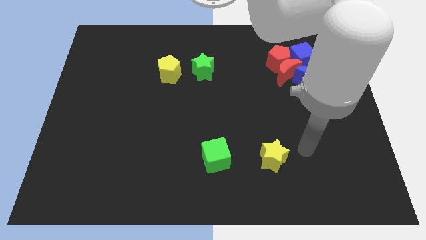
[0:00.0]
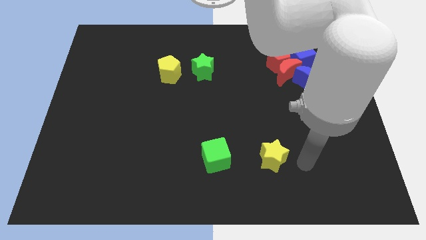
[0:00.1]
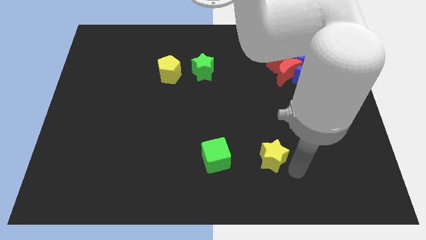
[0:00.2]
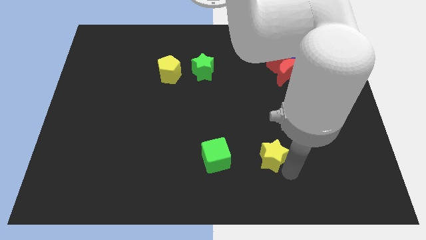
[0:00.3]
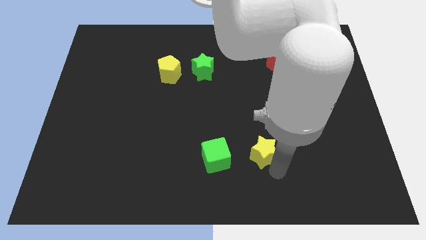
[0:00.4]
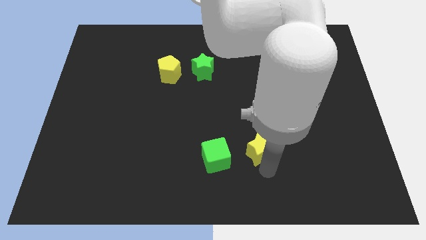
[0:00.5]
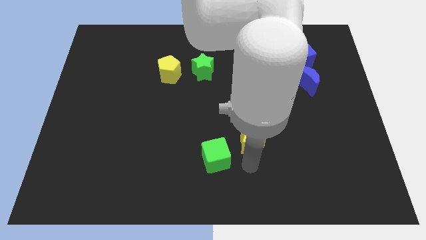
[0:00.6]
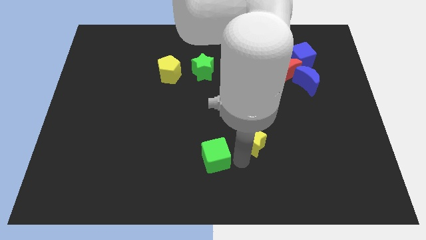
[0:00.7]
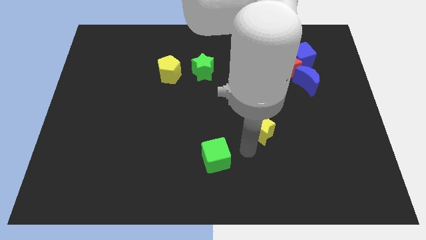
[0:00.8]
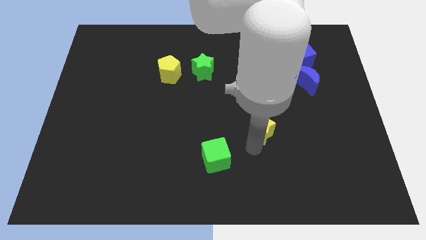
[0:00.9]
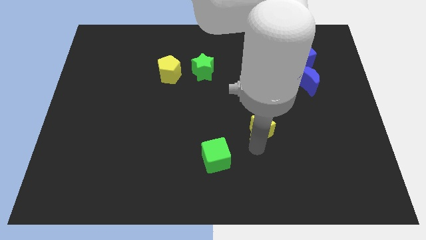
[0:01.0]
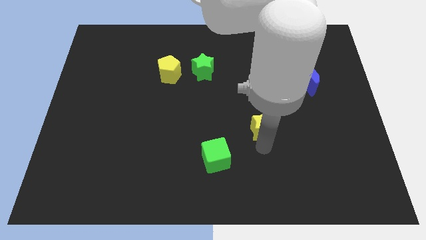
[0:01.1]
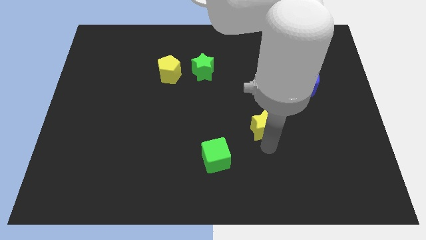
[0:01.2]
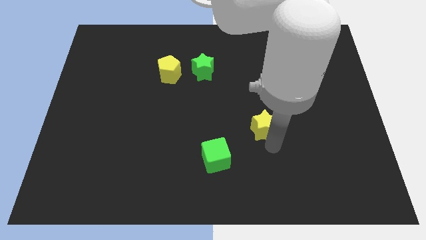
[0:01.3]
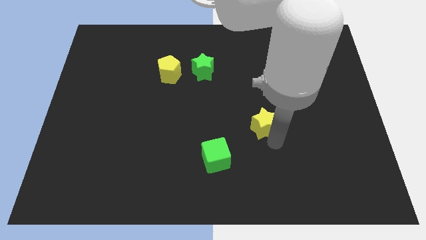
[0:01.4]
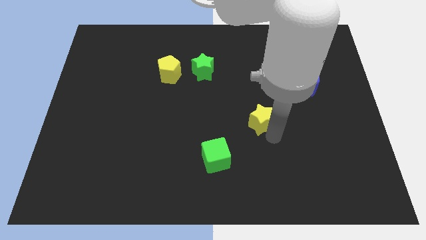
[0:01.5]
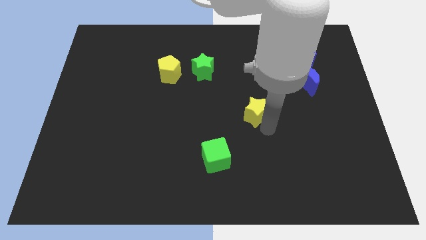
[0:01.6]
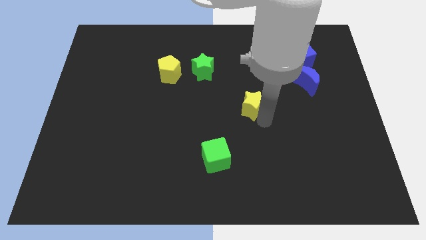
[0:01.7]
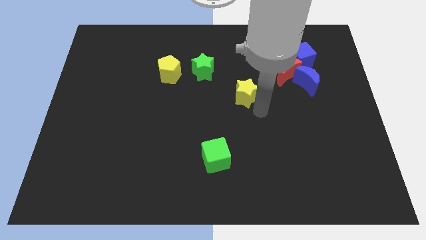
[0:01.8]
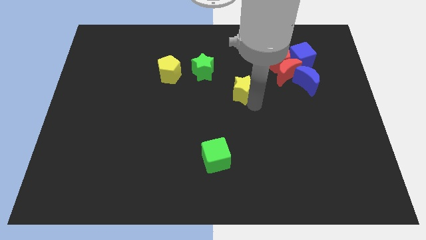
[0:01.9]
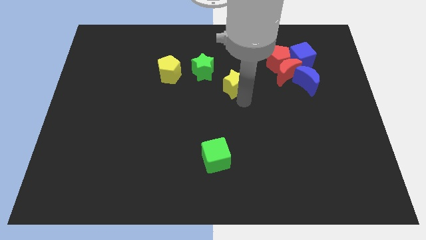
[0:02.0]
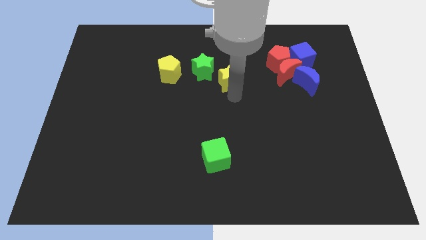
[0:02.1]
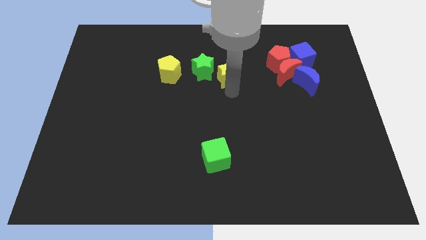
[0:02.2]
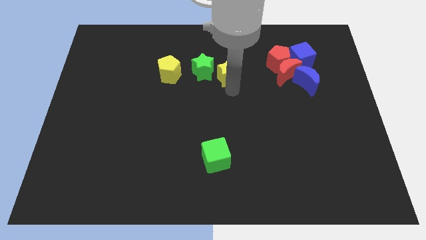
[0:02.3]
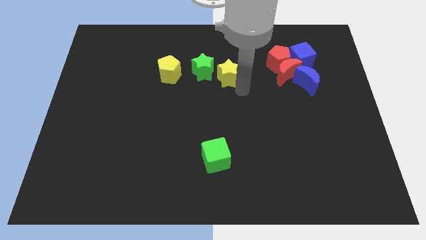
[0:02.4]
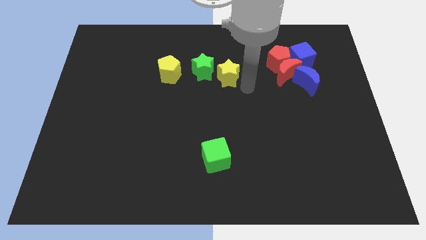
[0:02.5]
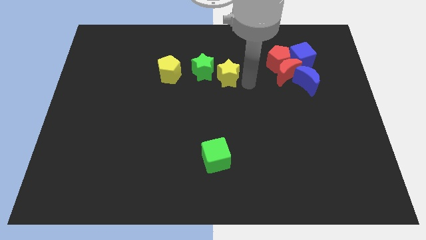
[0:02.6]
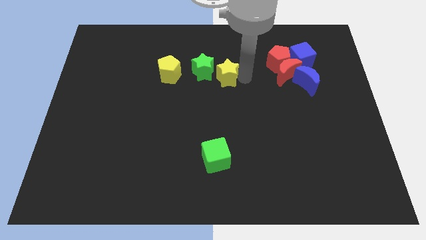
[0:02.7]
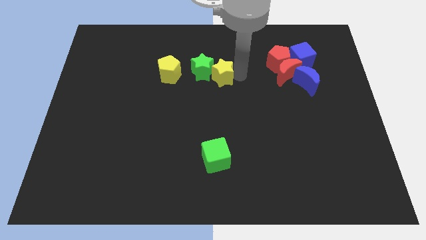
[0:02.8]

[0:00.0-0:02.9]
place yellow star near green star

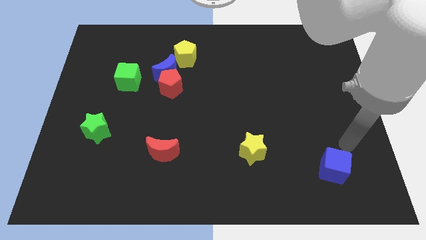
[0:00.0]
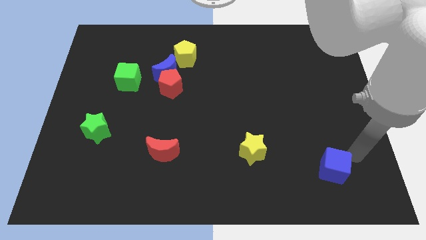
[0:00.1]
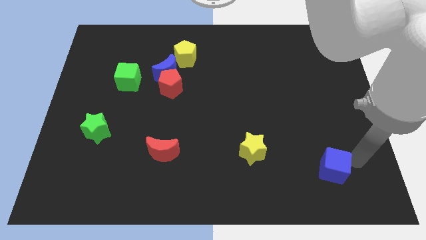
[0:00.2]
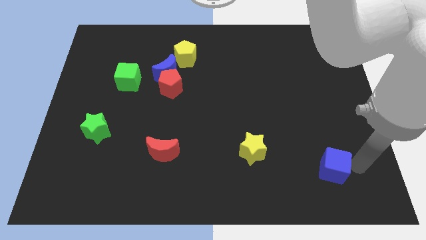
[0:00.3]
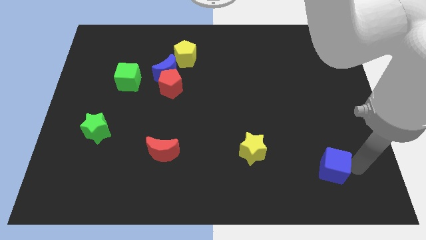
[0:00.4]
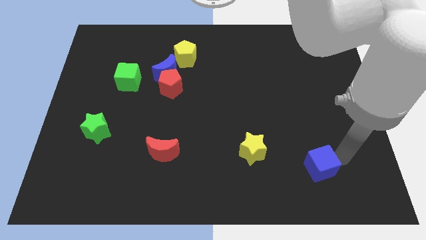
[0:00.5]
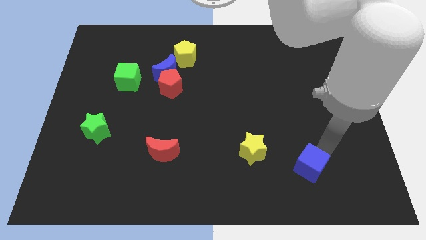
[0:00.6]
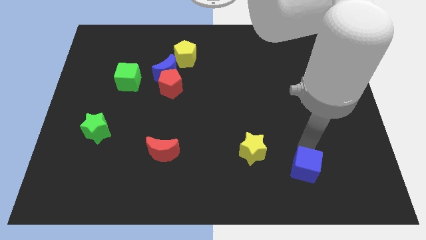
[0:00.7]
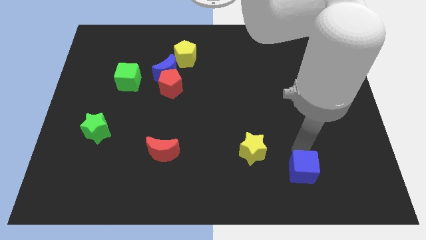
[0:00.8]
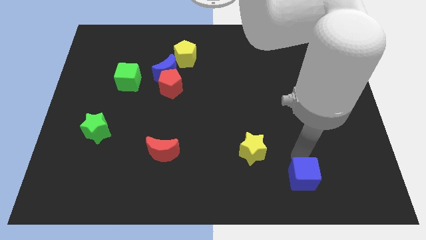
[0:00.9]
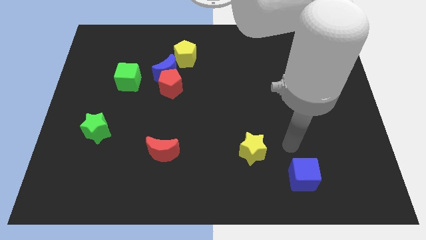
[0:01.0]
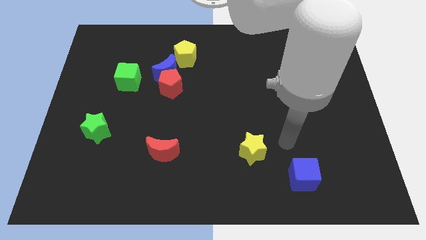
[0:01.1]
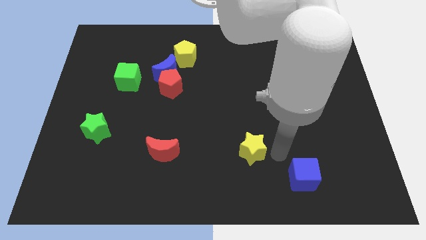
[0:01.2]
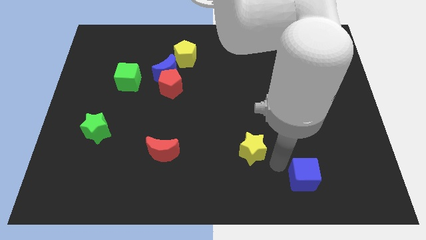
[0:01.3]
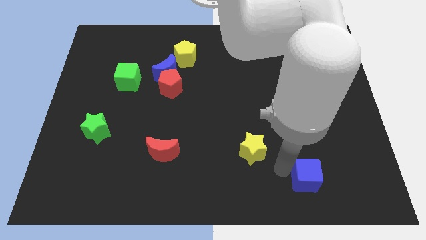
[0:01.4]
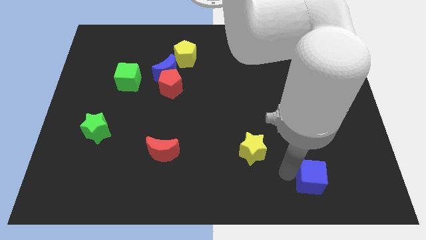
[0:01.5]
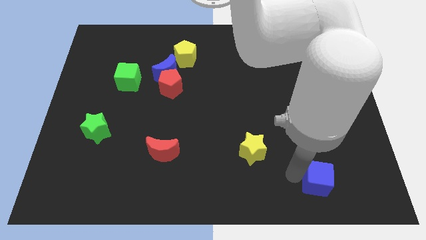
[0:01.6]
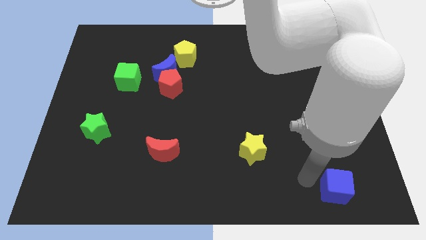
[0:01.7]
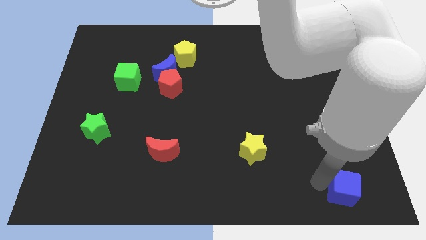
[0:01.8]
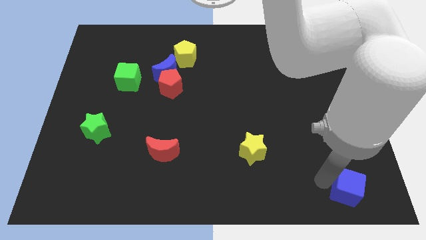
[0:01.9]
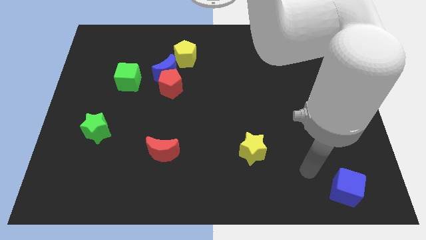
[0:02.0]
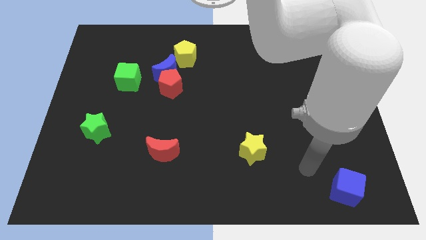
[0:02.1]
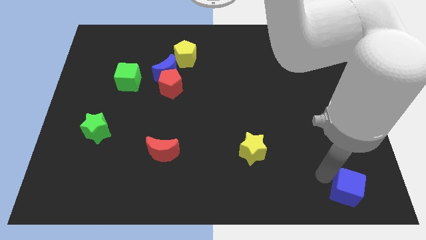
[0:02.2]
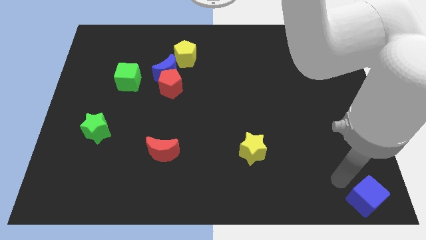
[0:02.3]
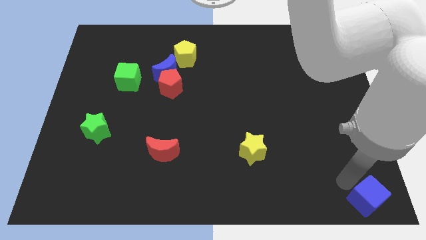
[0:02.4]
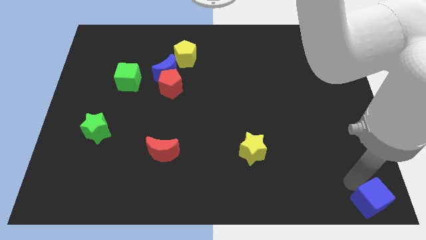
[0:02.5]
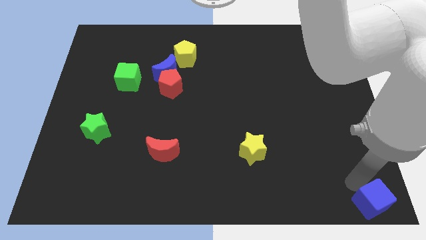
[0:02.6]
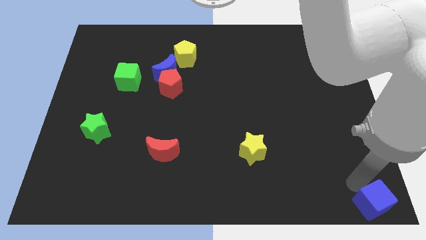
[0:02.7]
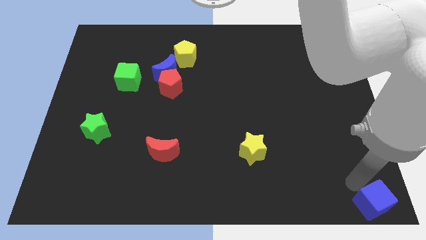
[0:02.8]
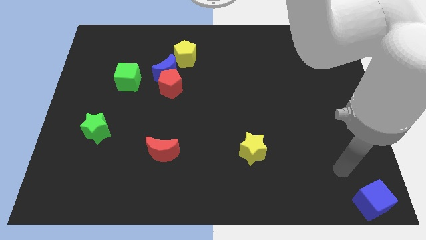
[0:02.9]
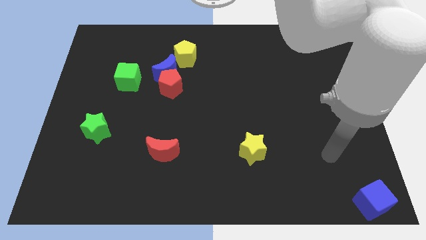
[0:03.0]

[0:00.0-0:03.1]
push the blue cube towards bottom right

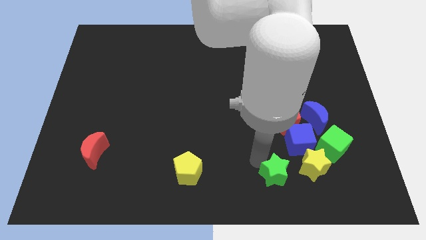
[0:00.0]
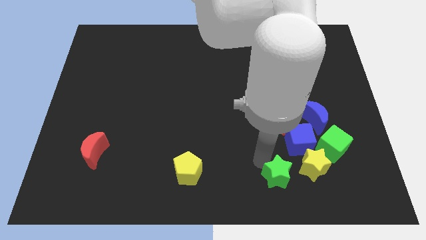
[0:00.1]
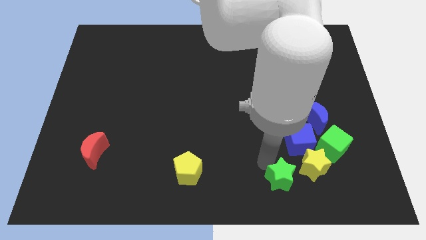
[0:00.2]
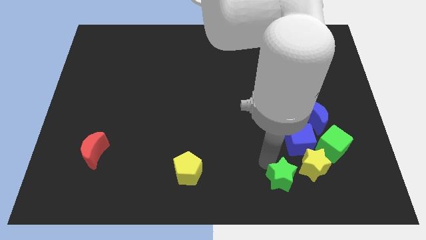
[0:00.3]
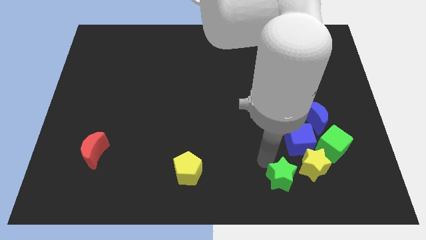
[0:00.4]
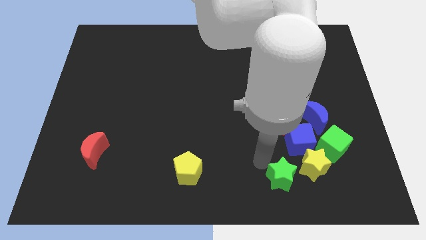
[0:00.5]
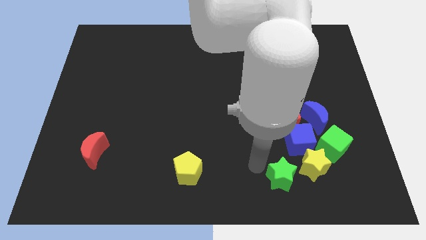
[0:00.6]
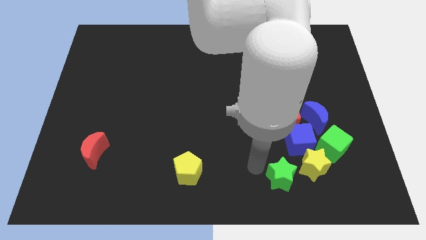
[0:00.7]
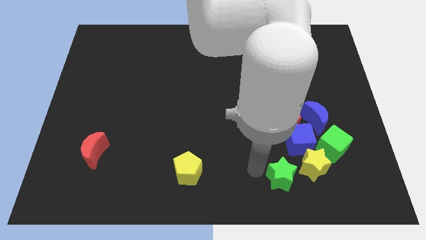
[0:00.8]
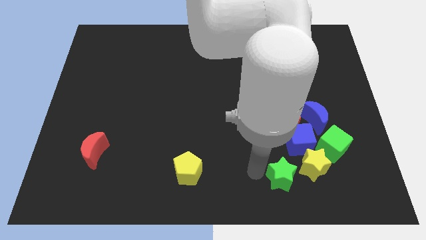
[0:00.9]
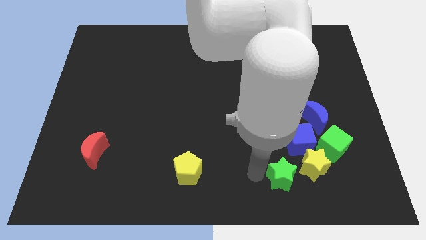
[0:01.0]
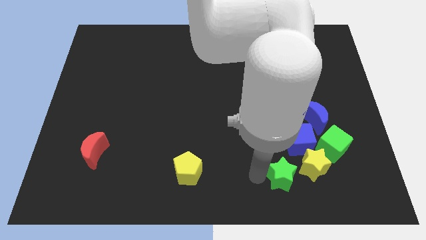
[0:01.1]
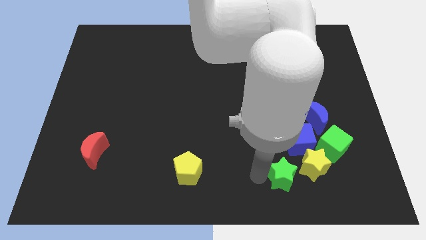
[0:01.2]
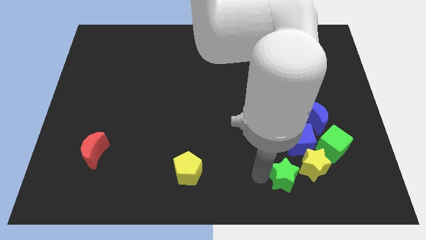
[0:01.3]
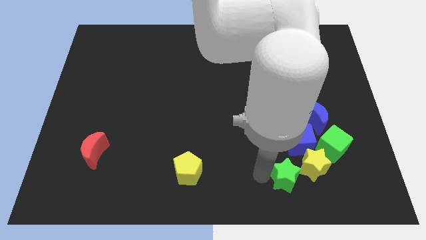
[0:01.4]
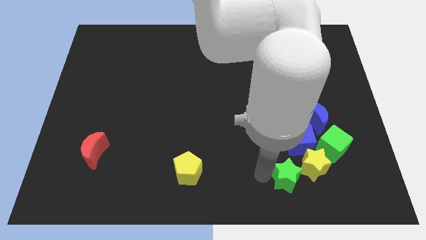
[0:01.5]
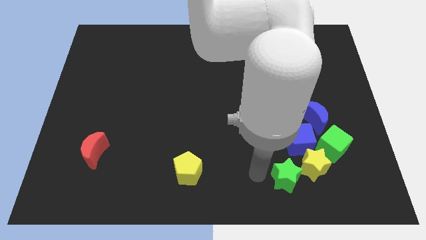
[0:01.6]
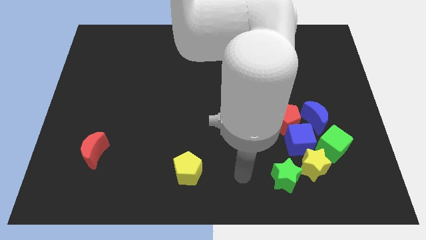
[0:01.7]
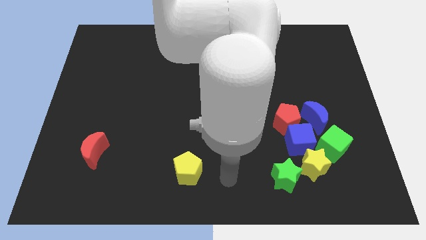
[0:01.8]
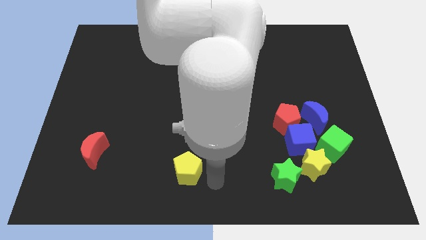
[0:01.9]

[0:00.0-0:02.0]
move the green star slightly to the right

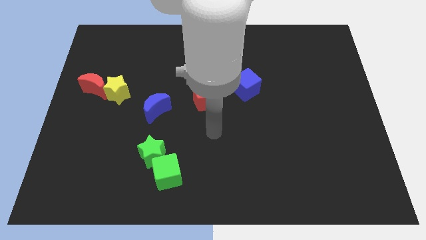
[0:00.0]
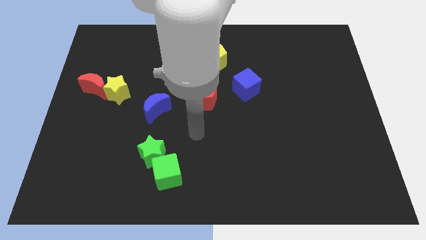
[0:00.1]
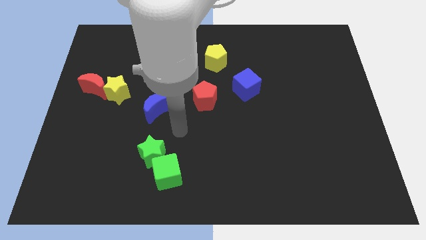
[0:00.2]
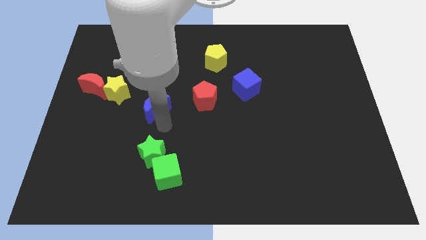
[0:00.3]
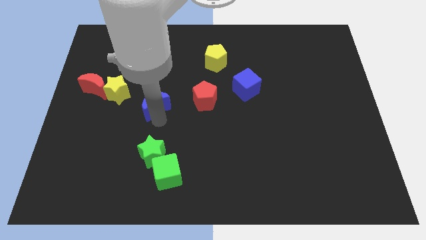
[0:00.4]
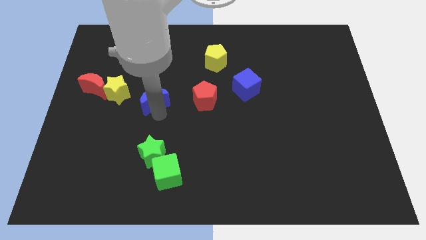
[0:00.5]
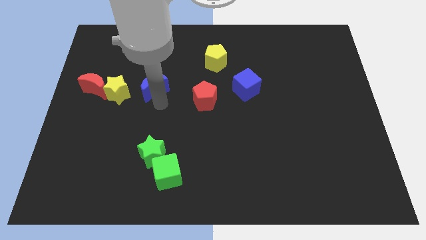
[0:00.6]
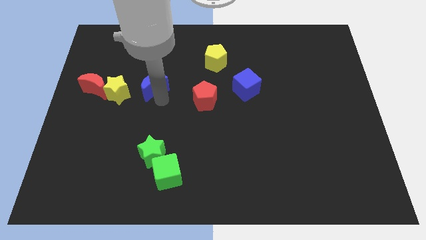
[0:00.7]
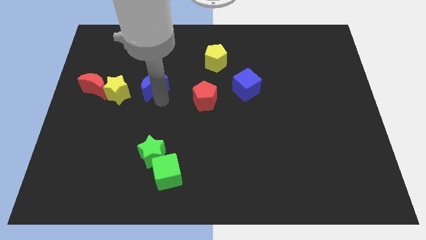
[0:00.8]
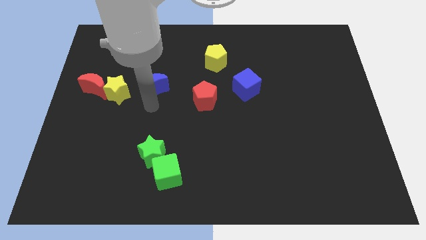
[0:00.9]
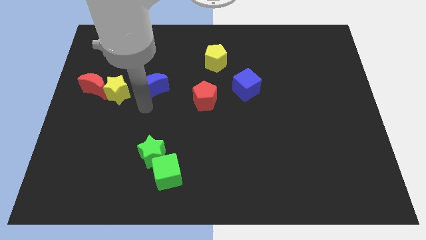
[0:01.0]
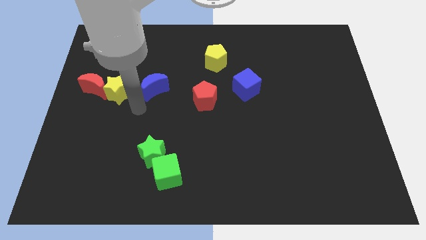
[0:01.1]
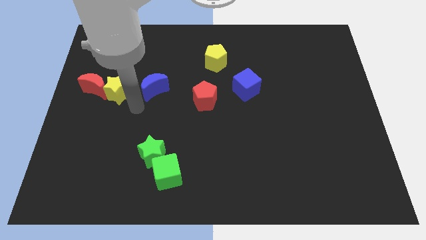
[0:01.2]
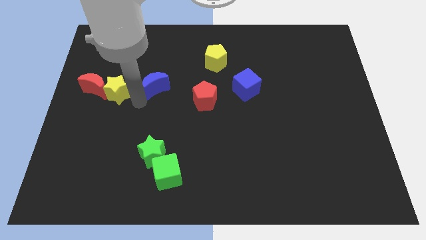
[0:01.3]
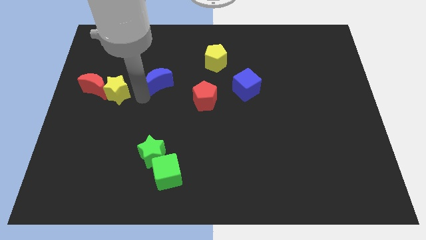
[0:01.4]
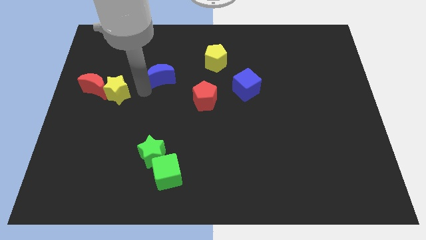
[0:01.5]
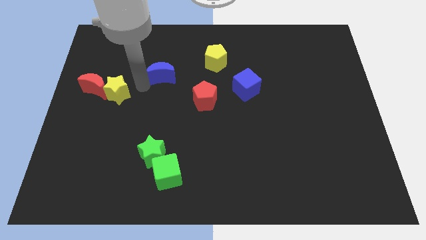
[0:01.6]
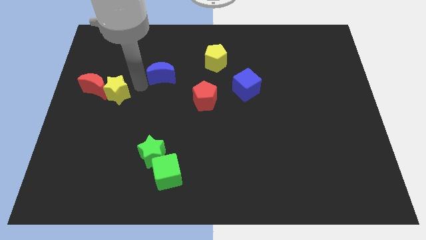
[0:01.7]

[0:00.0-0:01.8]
slide the blue crescent diagonally in between the yellow pentagon and yellow star
